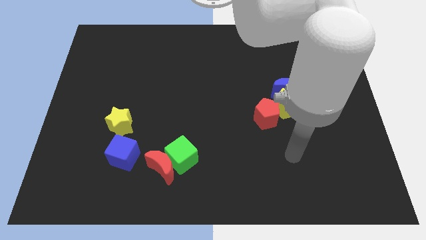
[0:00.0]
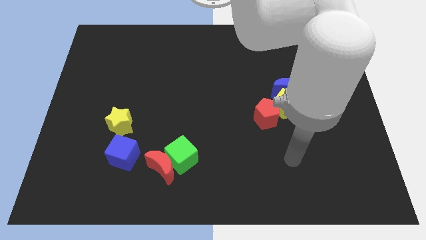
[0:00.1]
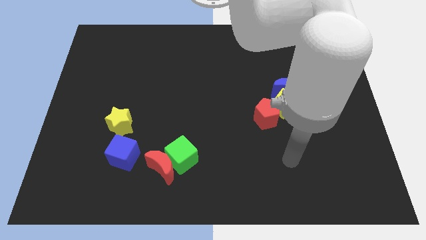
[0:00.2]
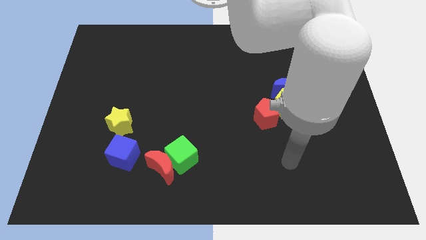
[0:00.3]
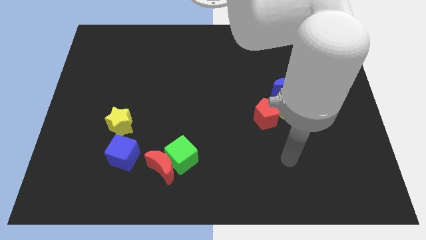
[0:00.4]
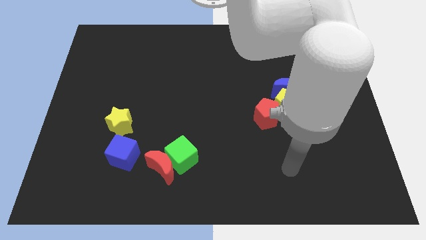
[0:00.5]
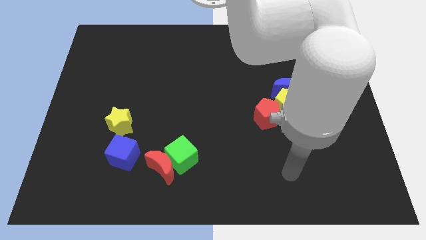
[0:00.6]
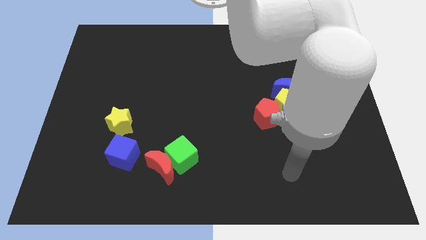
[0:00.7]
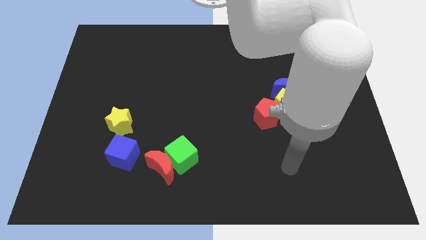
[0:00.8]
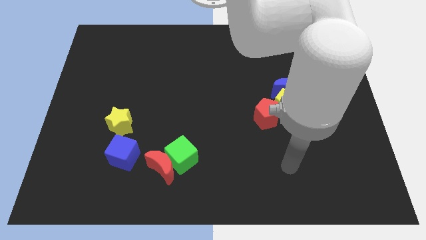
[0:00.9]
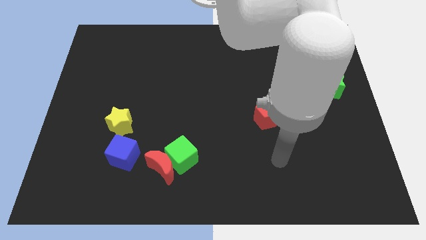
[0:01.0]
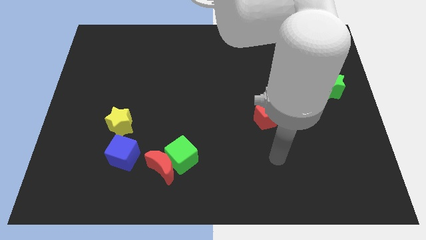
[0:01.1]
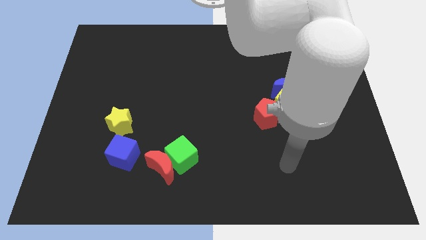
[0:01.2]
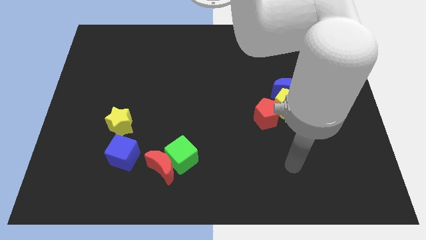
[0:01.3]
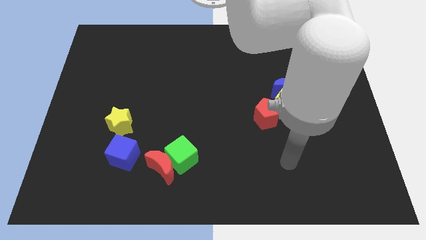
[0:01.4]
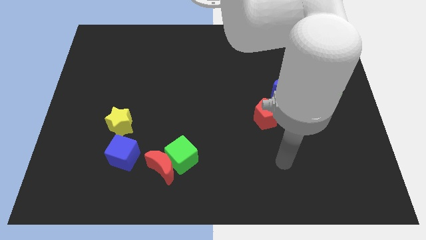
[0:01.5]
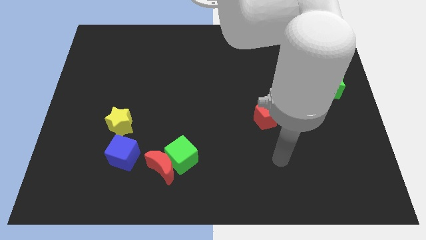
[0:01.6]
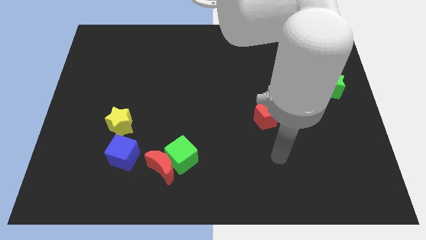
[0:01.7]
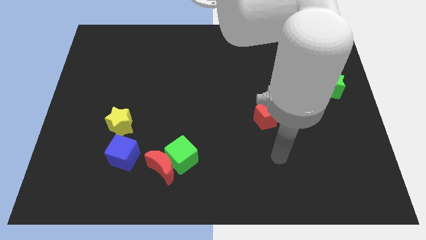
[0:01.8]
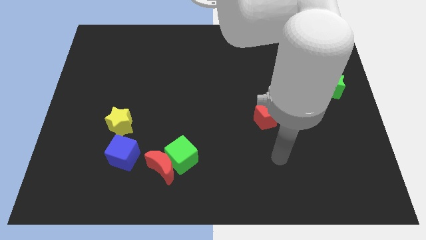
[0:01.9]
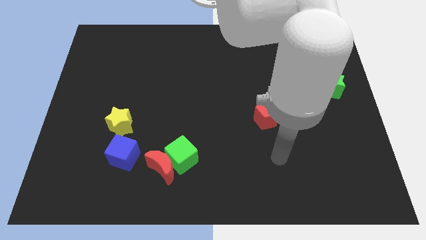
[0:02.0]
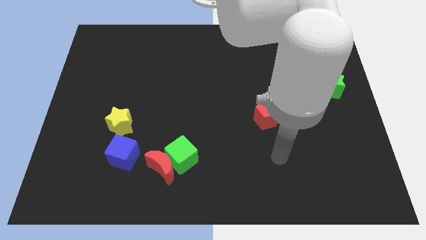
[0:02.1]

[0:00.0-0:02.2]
point your arm horizontal to the green cube

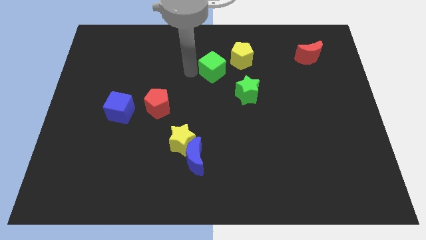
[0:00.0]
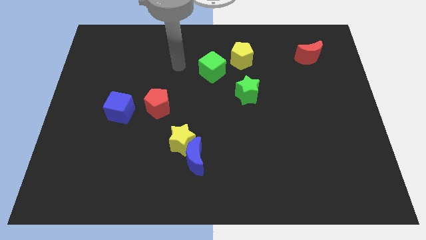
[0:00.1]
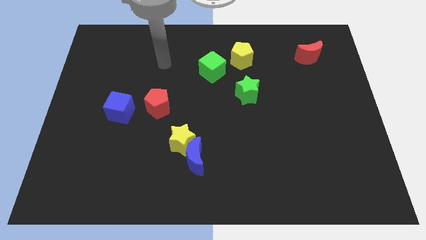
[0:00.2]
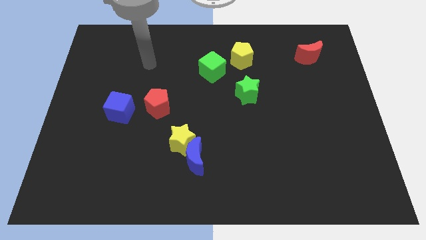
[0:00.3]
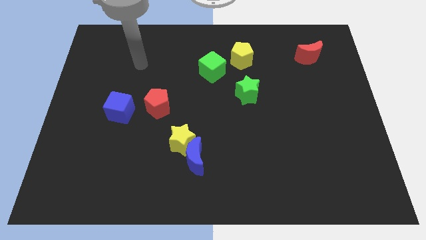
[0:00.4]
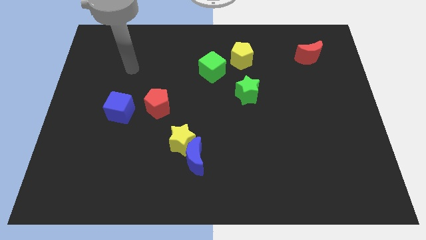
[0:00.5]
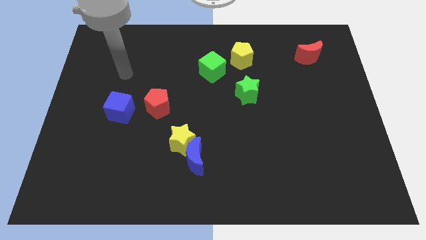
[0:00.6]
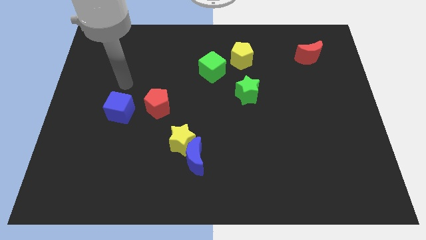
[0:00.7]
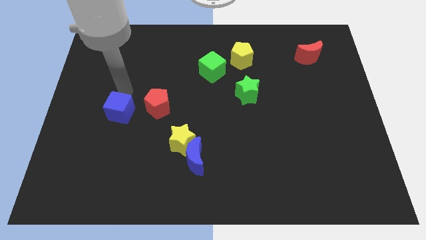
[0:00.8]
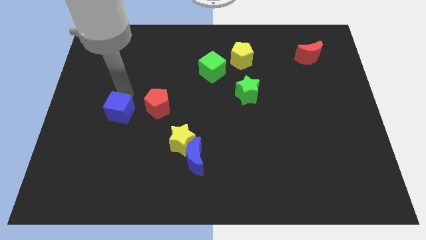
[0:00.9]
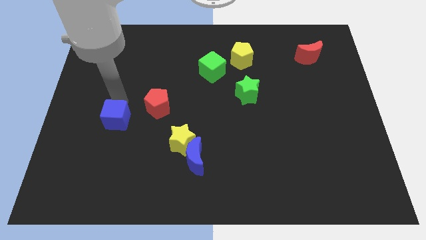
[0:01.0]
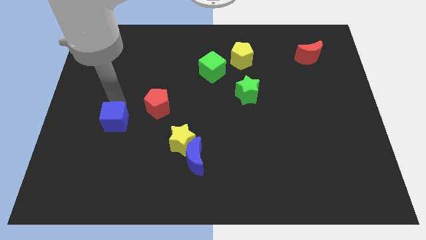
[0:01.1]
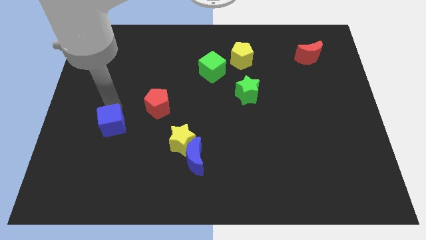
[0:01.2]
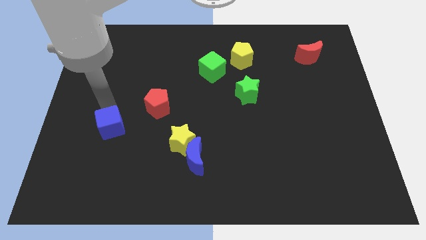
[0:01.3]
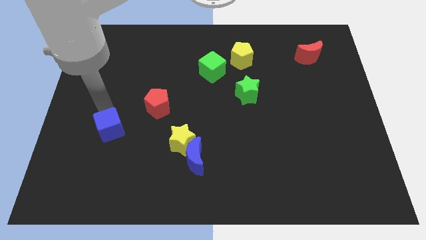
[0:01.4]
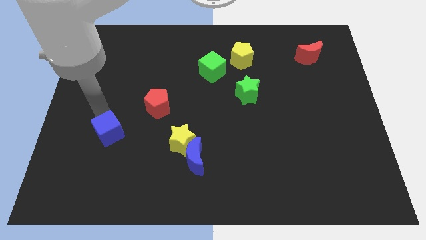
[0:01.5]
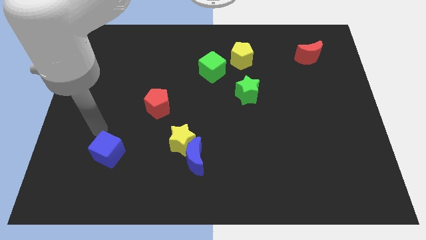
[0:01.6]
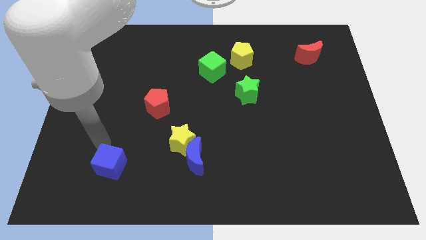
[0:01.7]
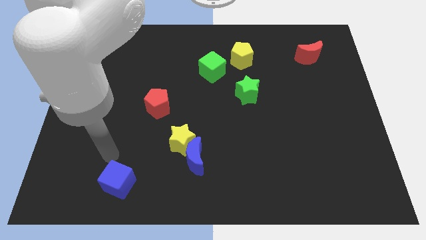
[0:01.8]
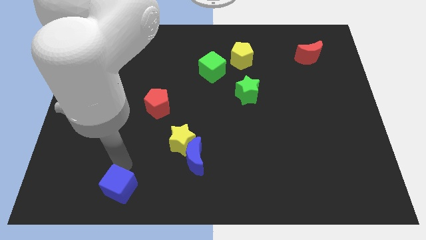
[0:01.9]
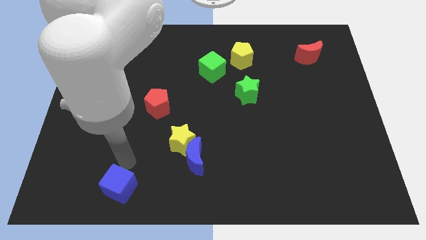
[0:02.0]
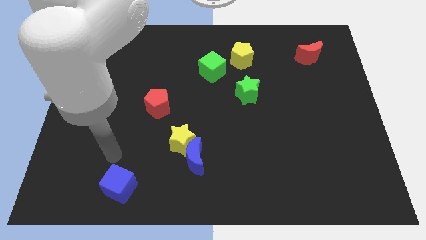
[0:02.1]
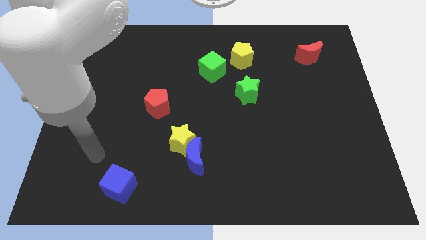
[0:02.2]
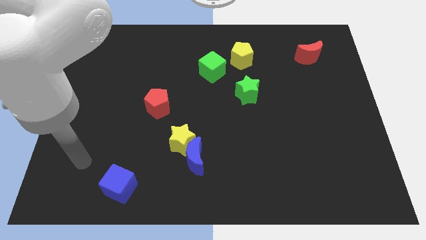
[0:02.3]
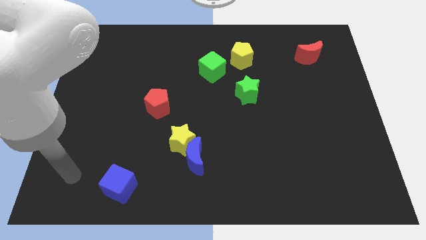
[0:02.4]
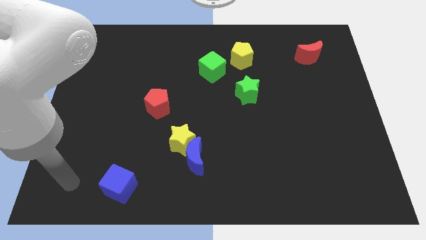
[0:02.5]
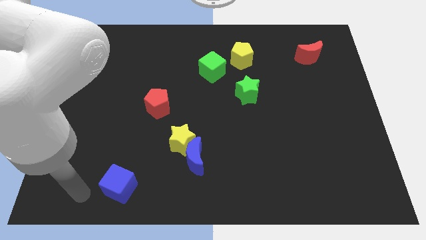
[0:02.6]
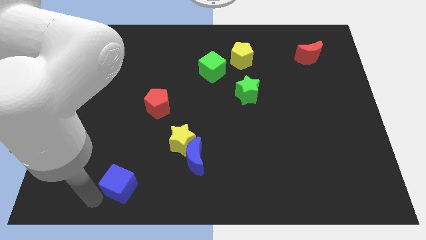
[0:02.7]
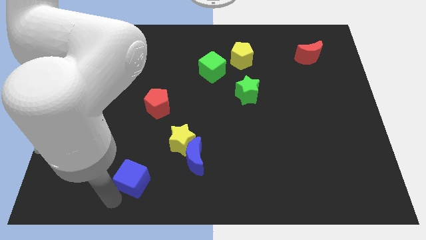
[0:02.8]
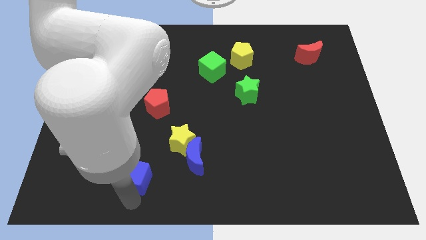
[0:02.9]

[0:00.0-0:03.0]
push the blue cube towards the bottom side of the board

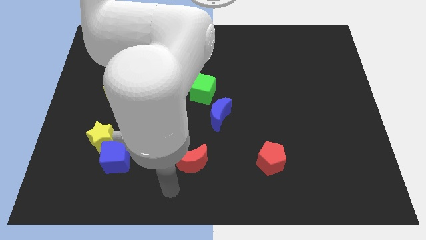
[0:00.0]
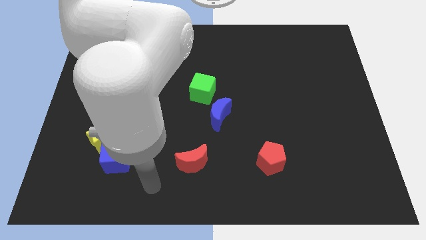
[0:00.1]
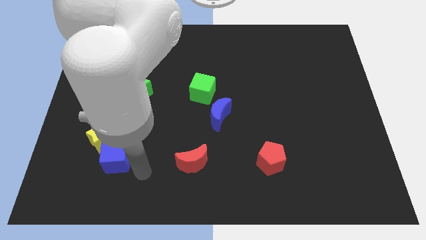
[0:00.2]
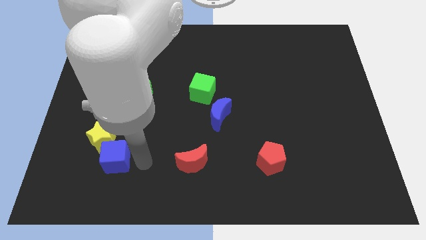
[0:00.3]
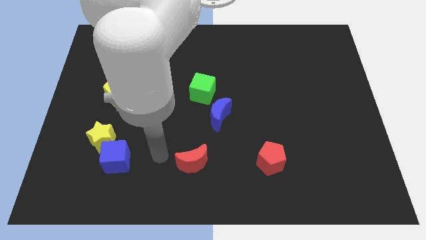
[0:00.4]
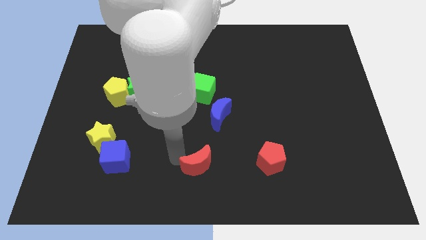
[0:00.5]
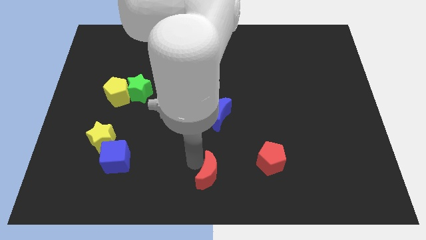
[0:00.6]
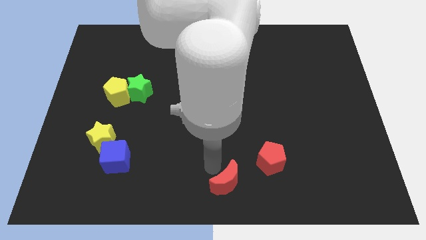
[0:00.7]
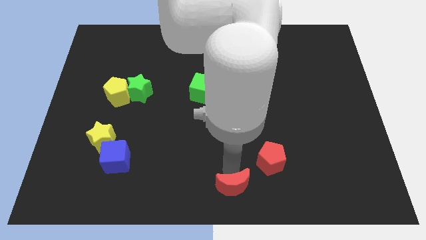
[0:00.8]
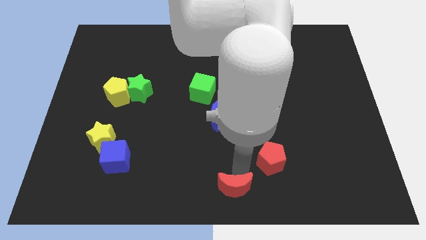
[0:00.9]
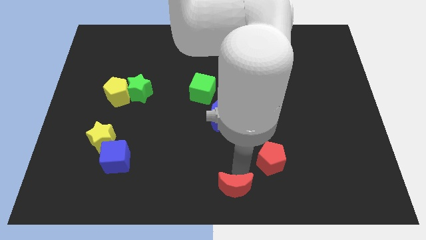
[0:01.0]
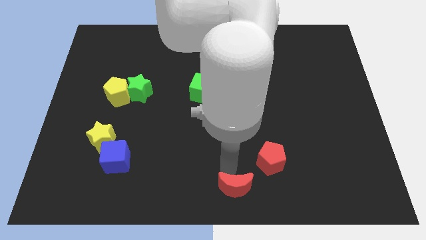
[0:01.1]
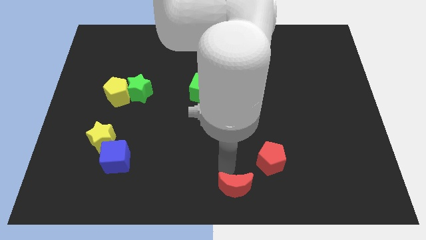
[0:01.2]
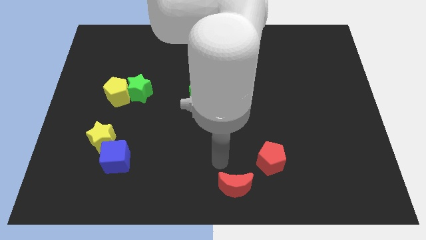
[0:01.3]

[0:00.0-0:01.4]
push the red crescent towards the bottom left side of the red pentagon

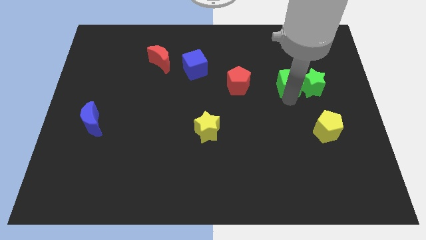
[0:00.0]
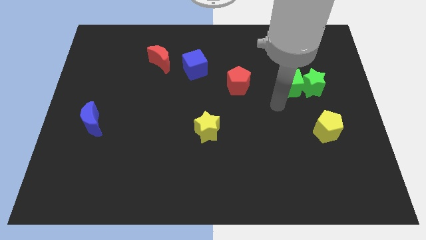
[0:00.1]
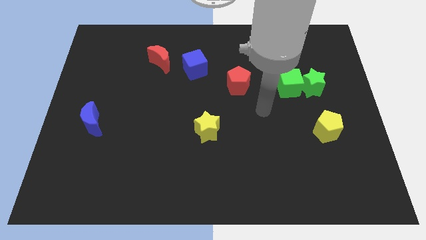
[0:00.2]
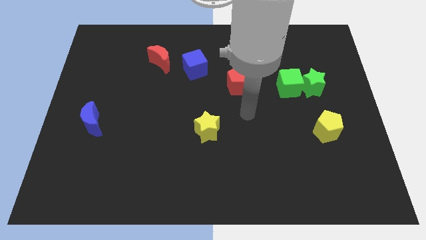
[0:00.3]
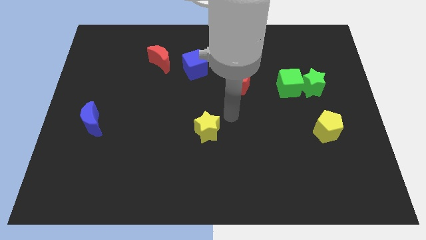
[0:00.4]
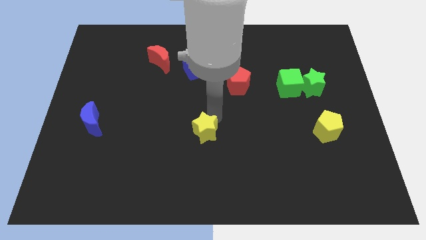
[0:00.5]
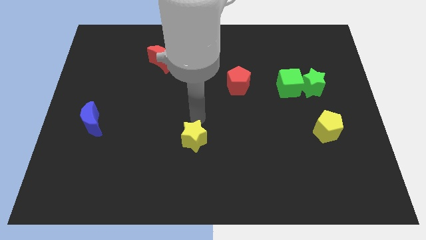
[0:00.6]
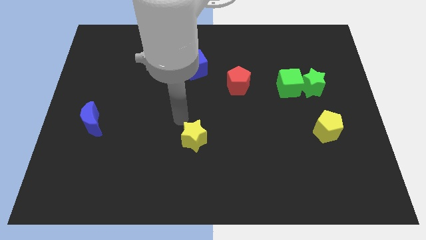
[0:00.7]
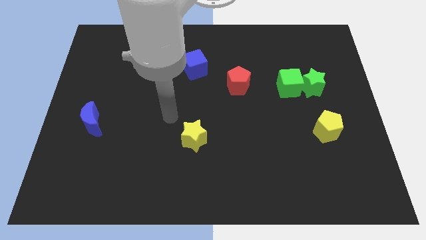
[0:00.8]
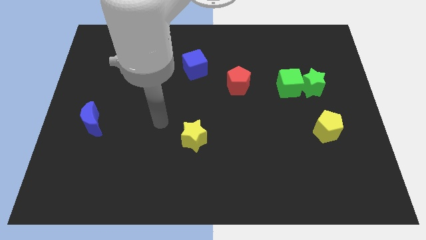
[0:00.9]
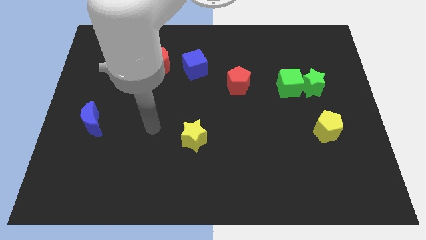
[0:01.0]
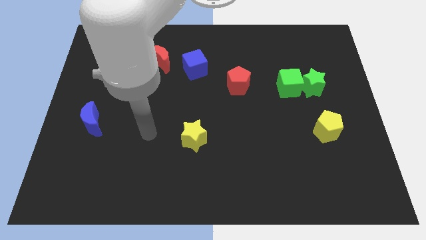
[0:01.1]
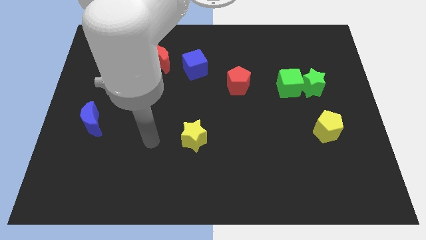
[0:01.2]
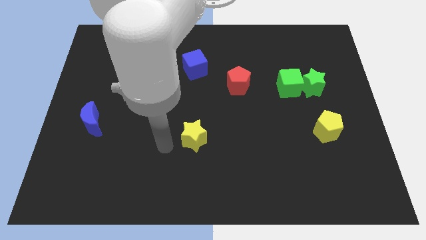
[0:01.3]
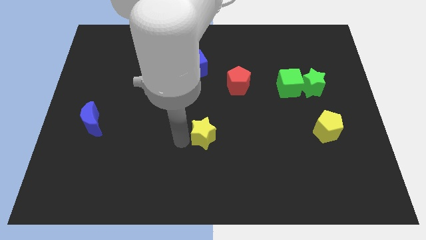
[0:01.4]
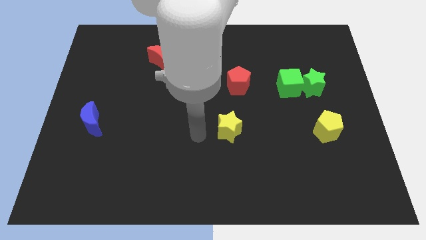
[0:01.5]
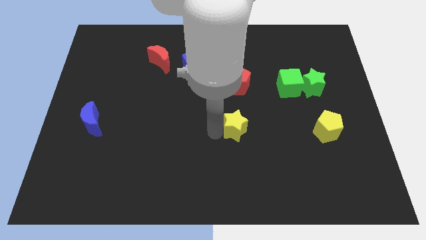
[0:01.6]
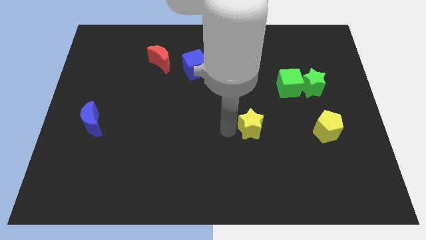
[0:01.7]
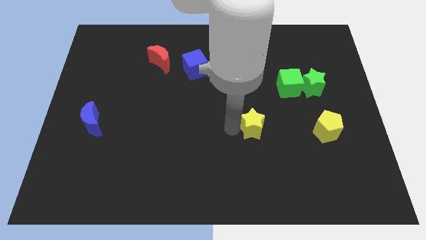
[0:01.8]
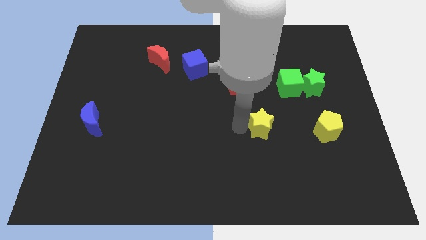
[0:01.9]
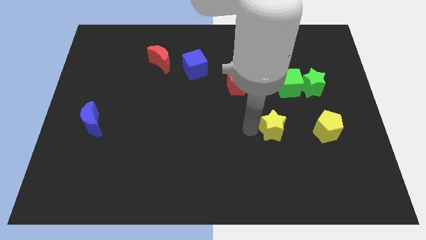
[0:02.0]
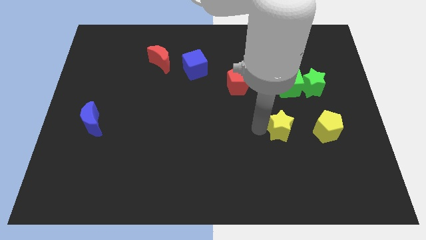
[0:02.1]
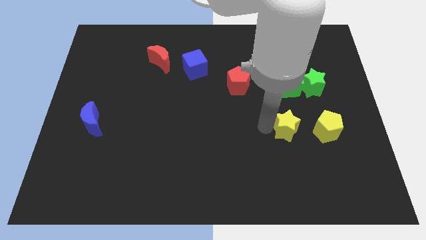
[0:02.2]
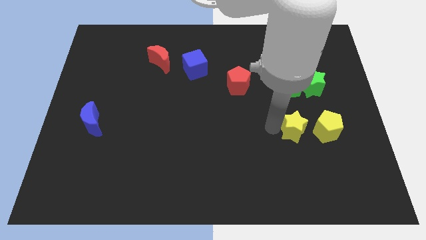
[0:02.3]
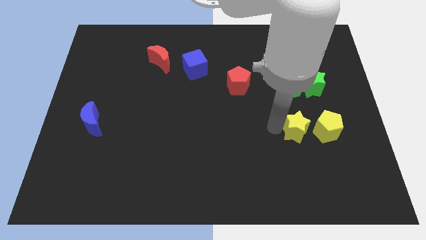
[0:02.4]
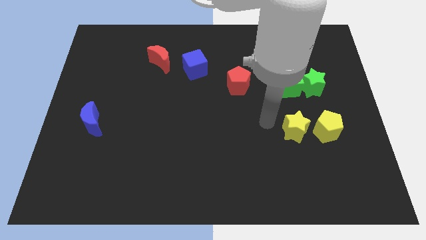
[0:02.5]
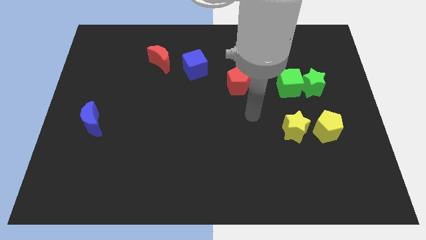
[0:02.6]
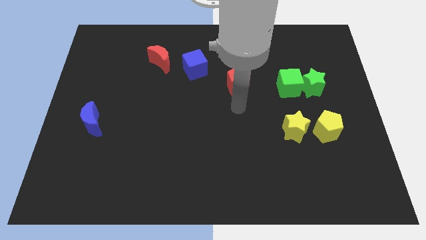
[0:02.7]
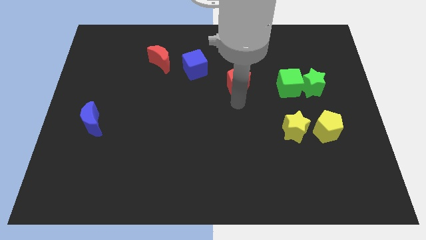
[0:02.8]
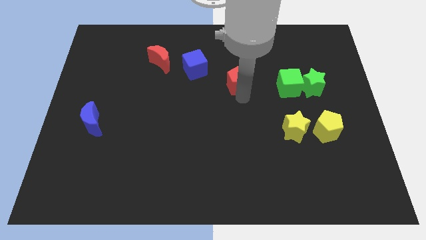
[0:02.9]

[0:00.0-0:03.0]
move the yellow star to the left side of the yellow pentagon
